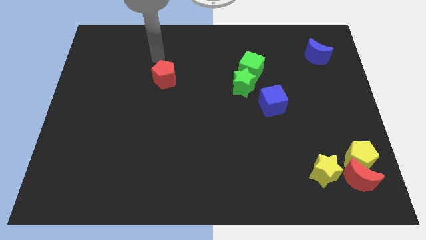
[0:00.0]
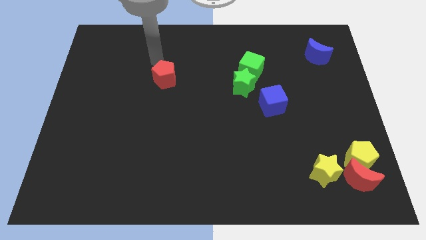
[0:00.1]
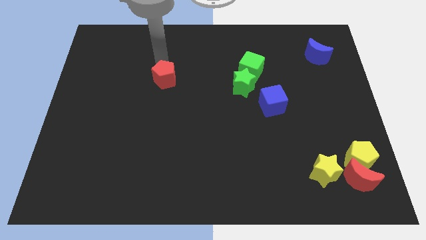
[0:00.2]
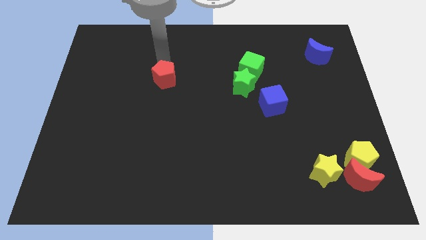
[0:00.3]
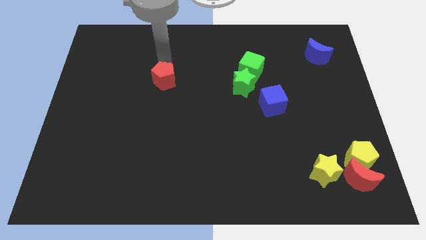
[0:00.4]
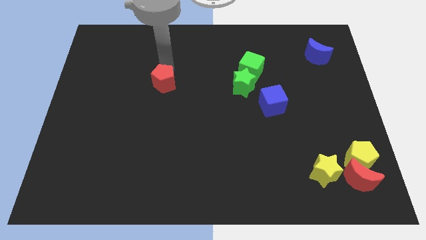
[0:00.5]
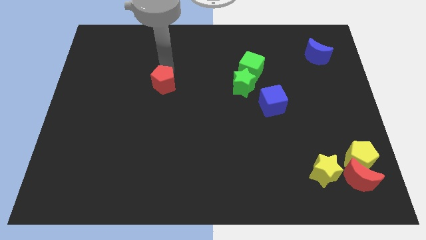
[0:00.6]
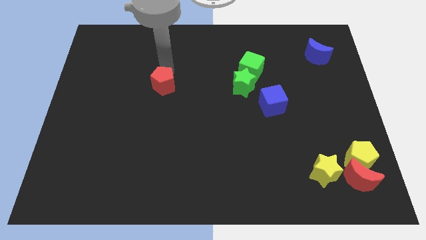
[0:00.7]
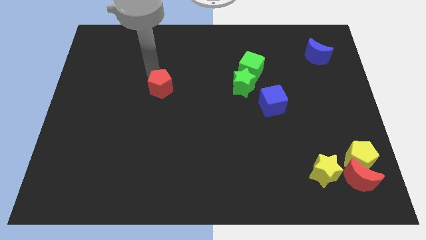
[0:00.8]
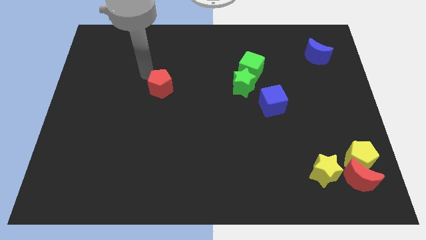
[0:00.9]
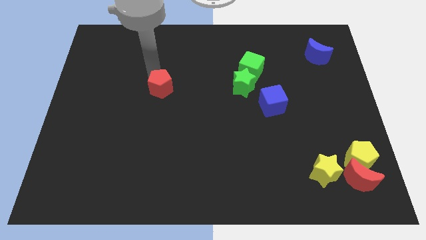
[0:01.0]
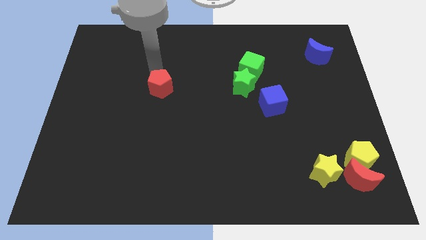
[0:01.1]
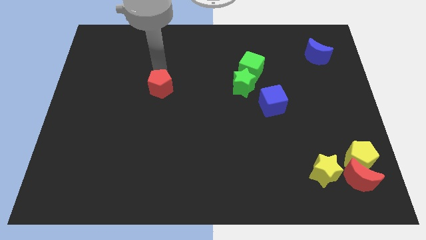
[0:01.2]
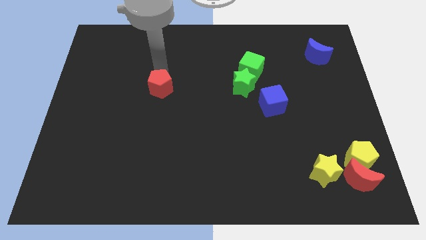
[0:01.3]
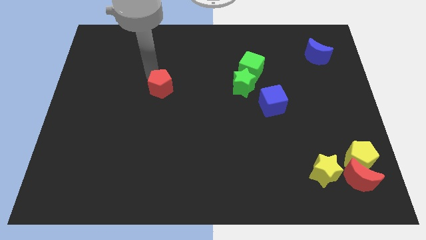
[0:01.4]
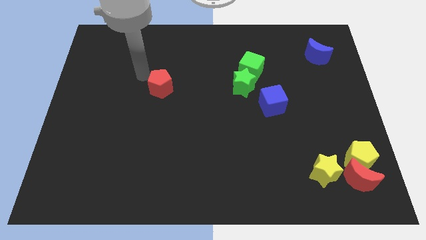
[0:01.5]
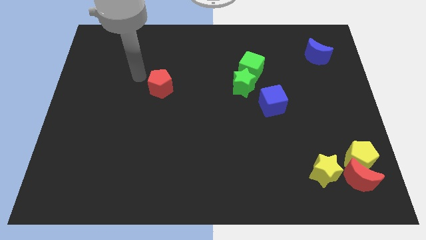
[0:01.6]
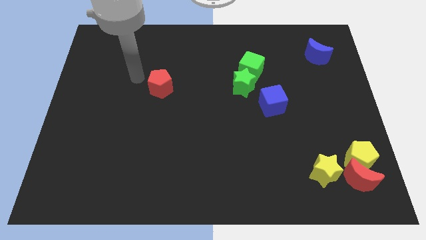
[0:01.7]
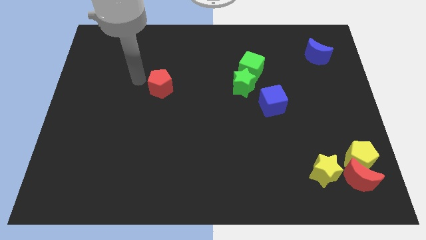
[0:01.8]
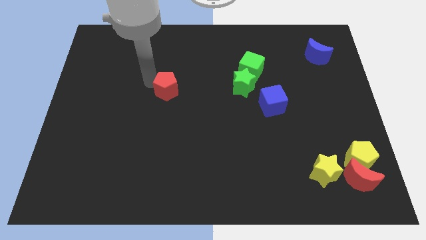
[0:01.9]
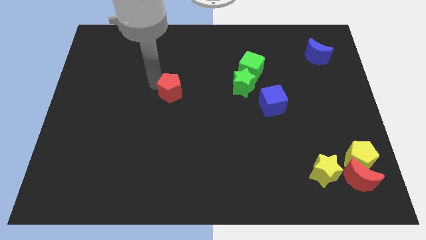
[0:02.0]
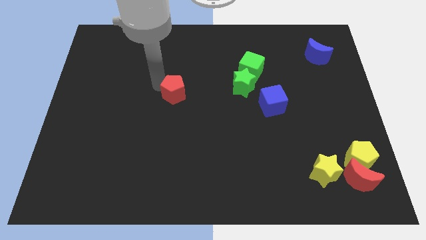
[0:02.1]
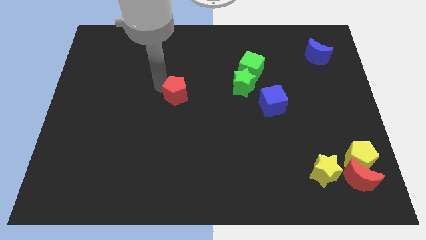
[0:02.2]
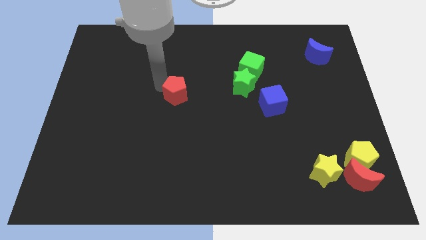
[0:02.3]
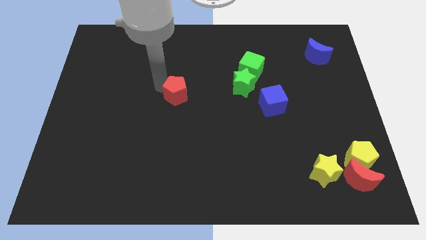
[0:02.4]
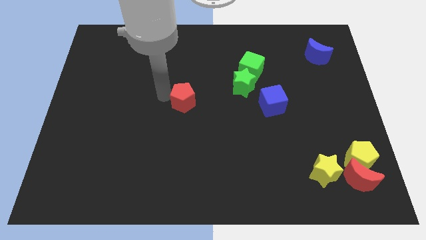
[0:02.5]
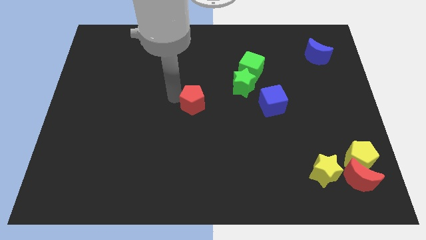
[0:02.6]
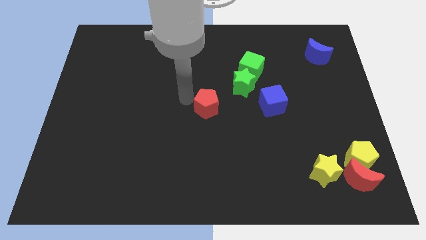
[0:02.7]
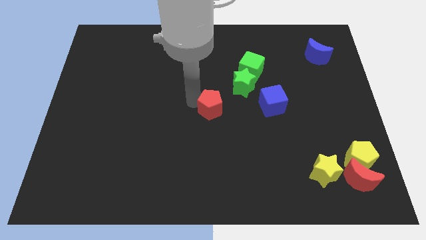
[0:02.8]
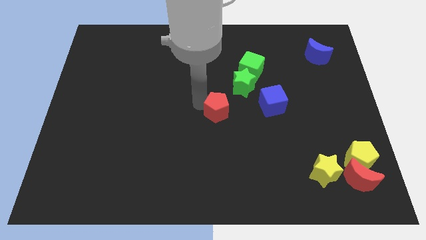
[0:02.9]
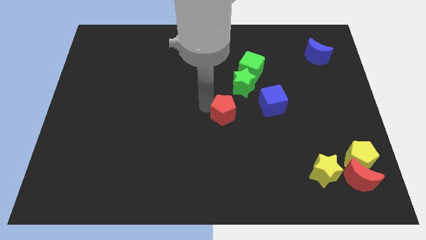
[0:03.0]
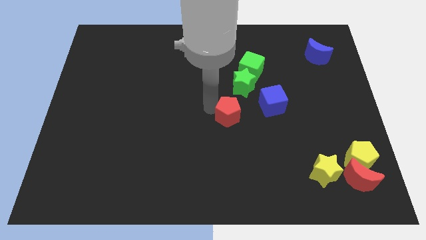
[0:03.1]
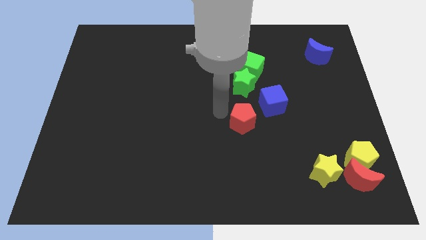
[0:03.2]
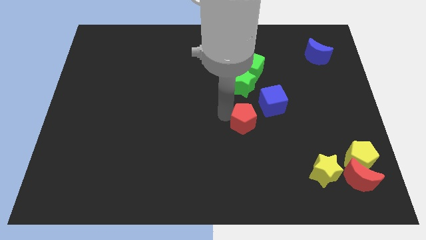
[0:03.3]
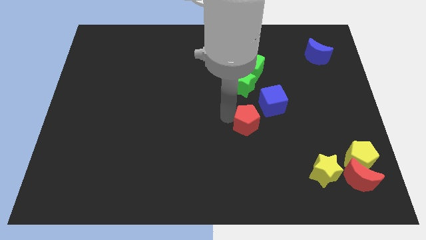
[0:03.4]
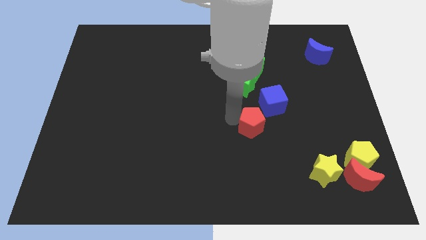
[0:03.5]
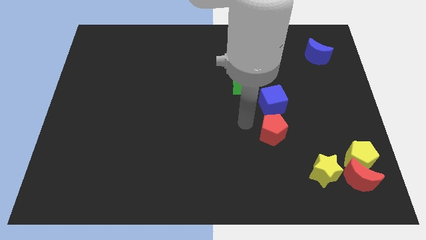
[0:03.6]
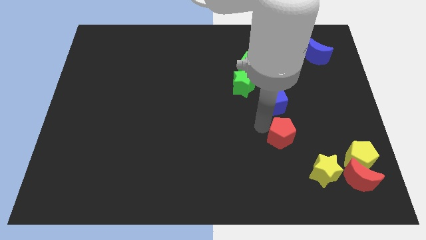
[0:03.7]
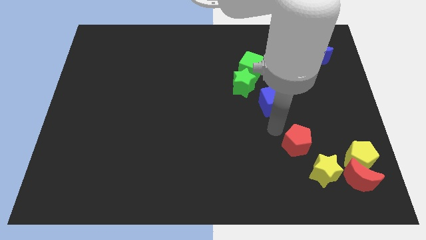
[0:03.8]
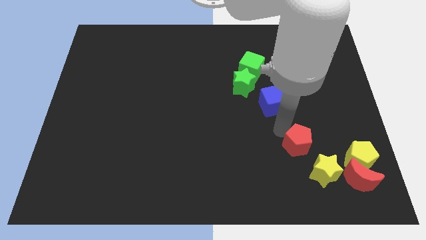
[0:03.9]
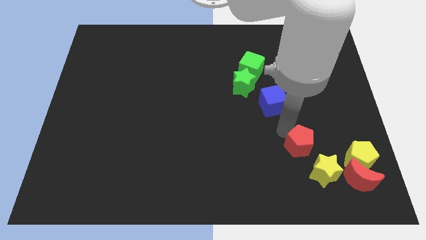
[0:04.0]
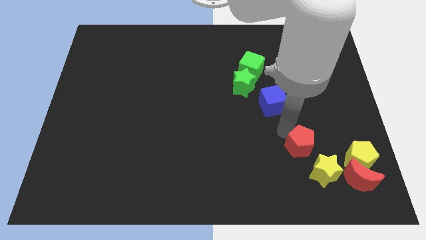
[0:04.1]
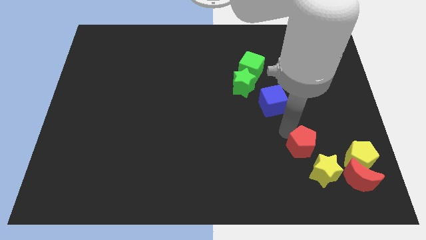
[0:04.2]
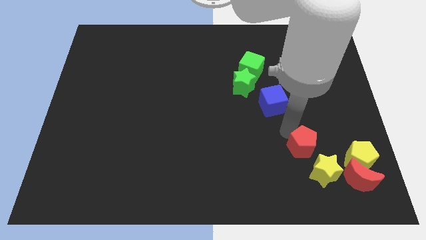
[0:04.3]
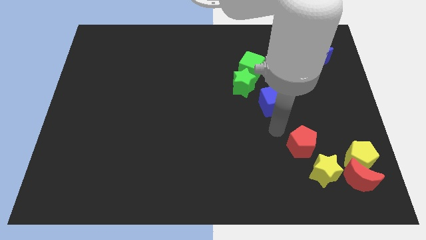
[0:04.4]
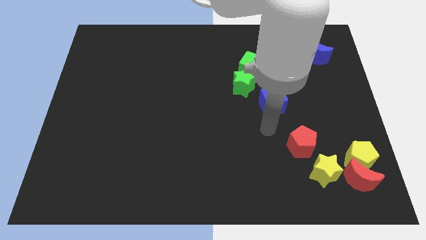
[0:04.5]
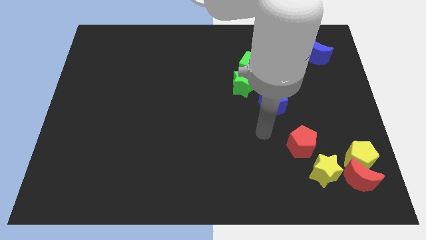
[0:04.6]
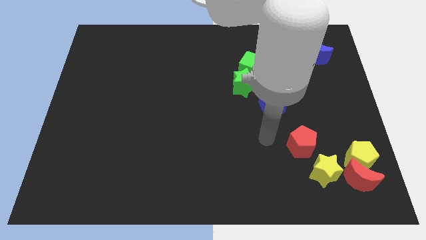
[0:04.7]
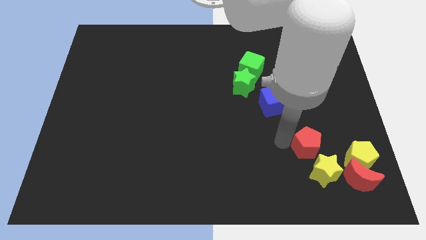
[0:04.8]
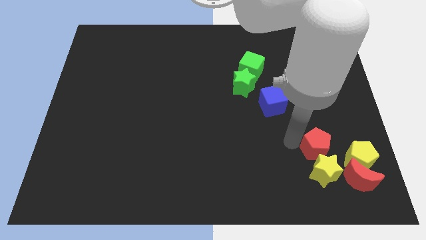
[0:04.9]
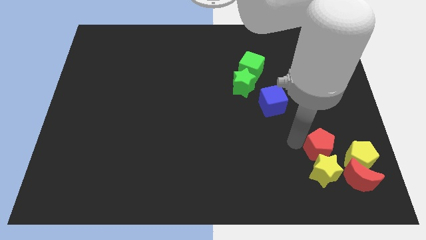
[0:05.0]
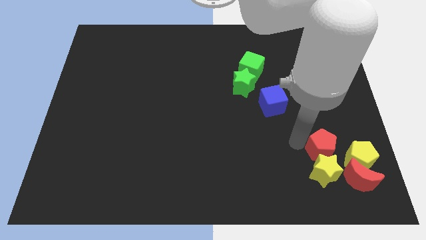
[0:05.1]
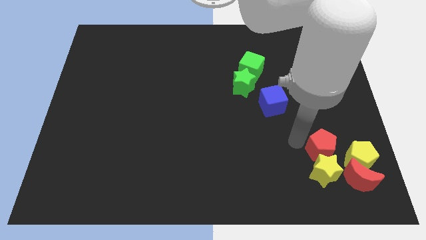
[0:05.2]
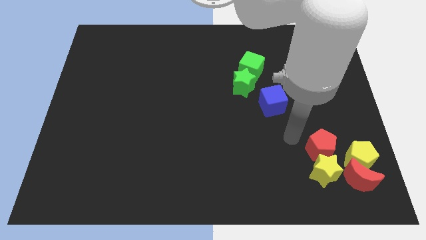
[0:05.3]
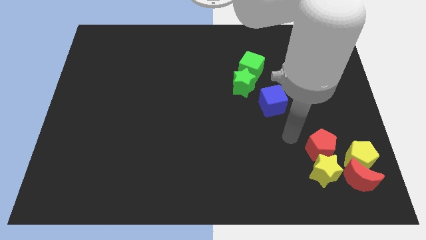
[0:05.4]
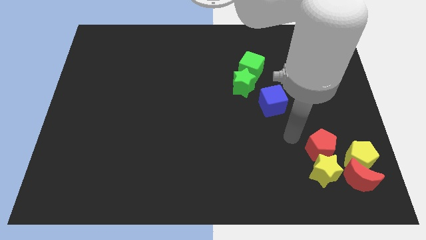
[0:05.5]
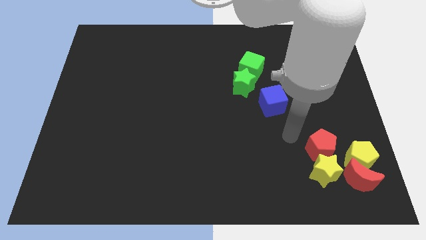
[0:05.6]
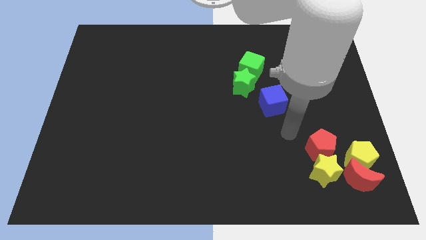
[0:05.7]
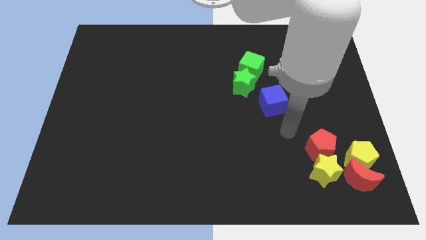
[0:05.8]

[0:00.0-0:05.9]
push the red pentagon on top of yellow star

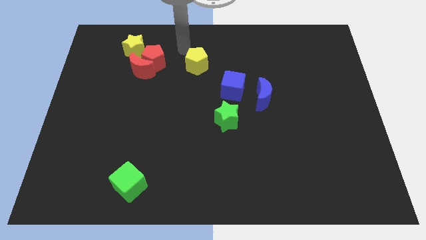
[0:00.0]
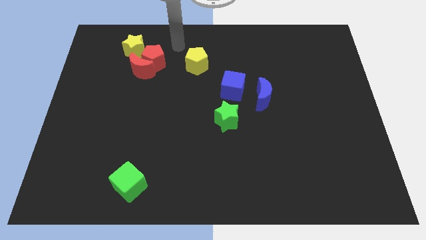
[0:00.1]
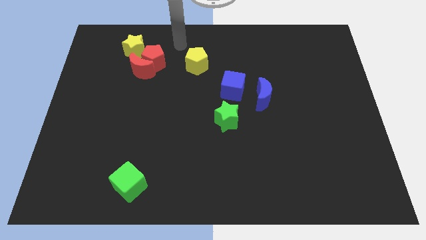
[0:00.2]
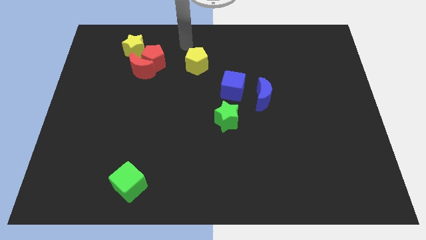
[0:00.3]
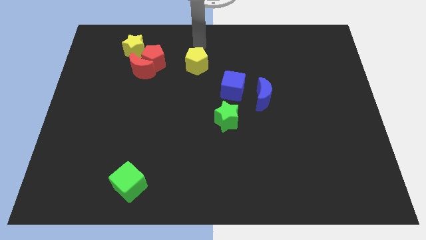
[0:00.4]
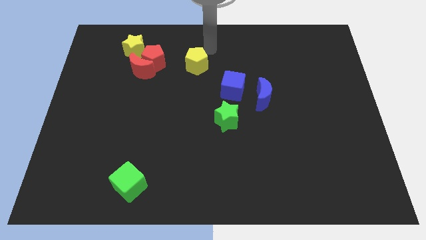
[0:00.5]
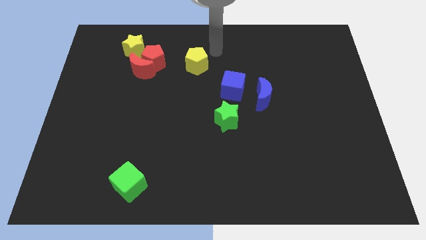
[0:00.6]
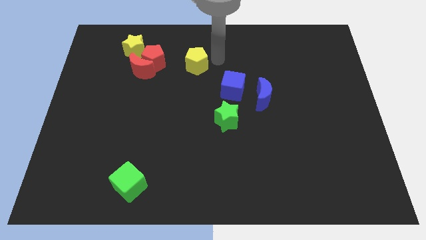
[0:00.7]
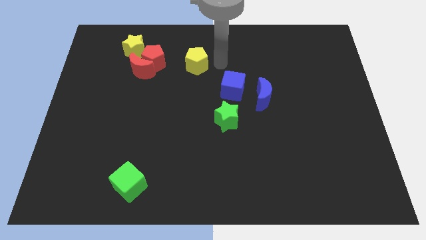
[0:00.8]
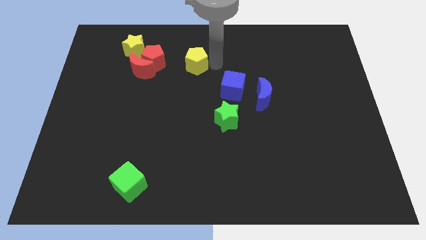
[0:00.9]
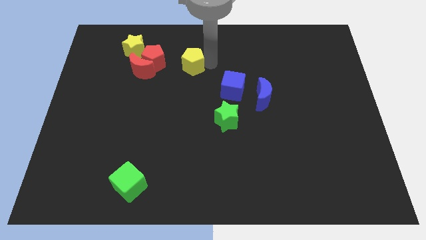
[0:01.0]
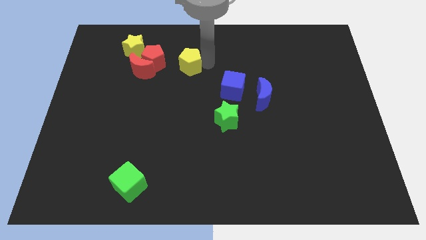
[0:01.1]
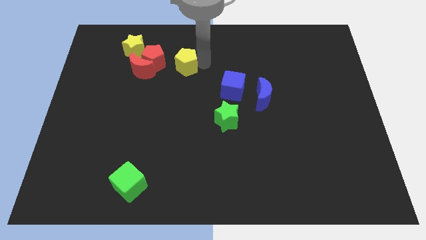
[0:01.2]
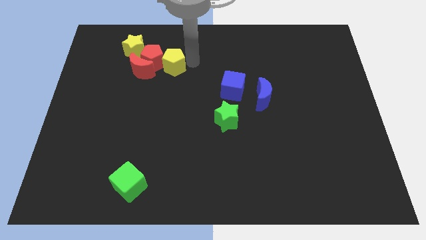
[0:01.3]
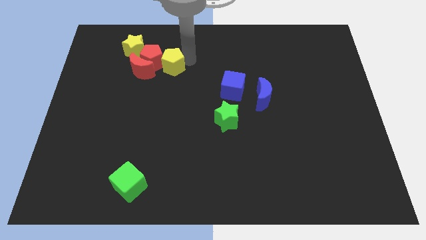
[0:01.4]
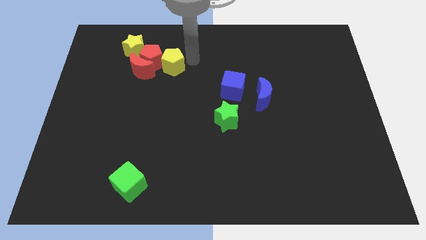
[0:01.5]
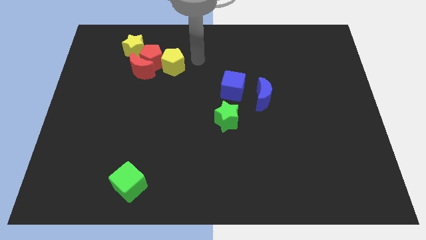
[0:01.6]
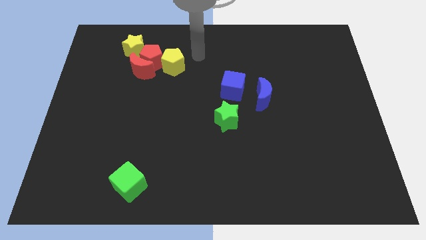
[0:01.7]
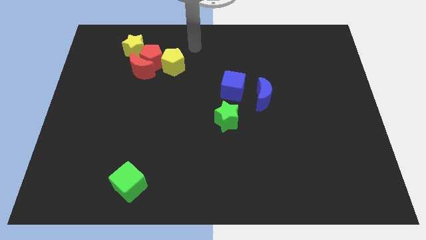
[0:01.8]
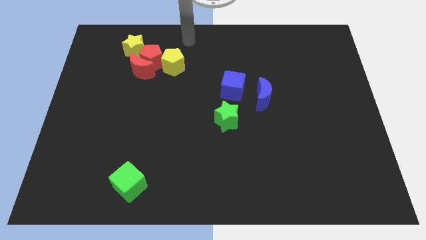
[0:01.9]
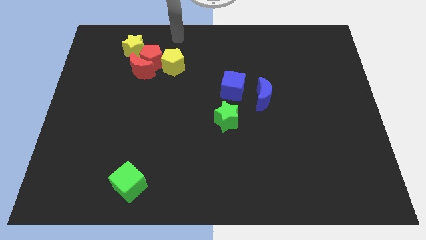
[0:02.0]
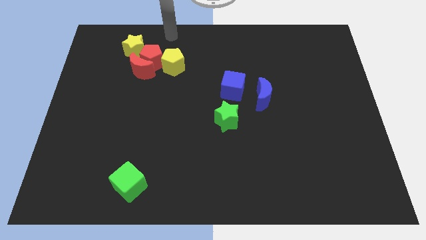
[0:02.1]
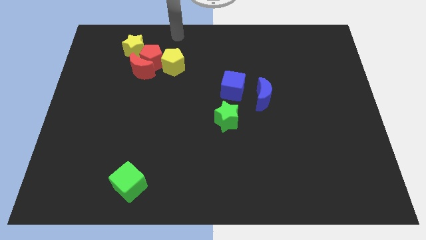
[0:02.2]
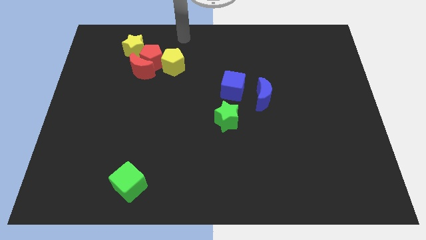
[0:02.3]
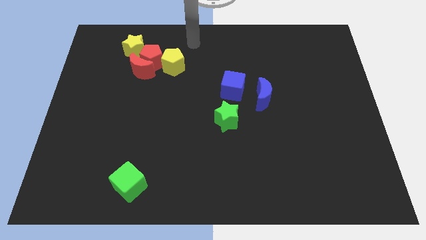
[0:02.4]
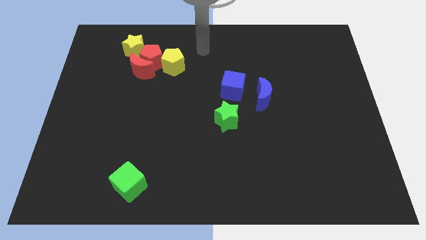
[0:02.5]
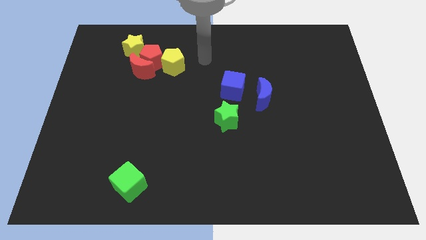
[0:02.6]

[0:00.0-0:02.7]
move the yellow pentagon into the right side of the red pentagon

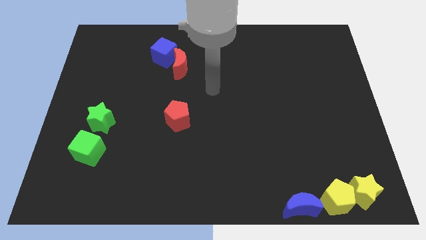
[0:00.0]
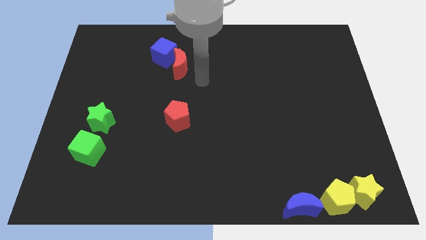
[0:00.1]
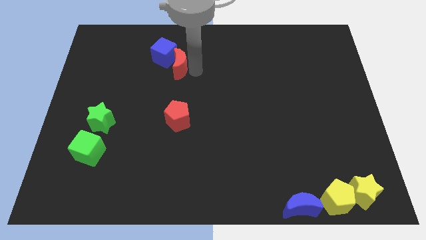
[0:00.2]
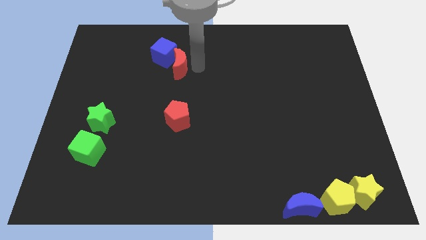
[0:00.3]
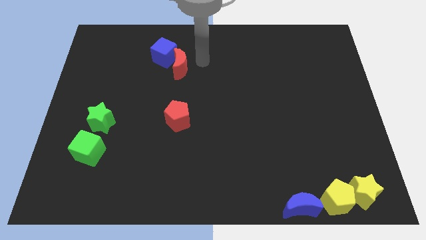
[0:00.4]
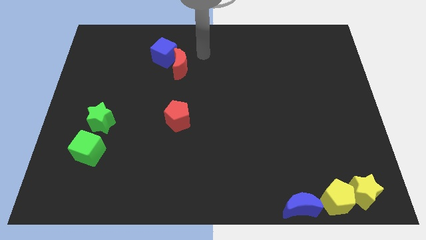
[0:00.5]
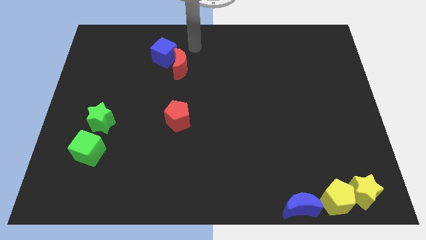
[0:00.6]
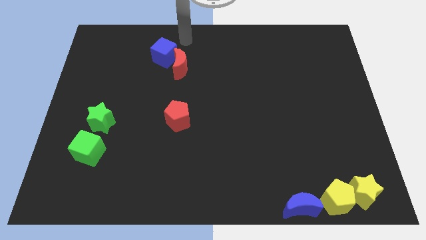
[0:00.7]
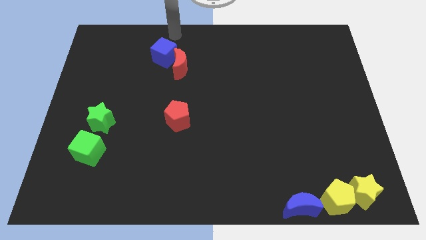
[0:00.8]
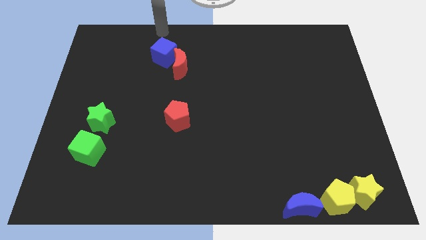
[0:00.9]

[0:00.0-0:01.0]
point your arm at the top of the blue cube
